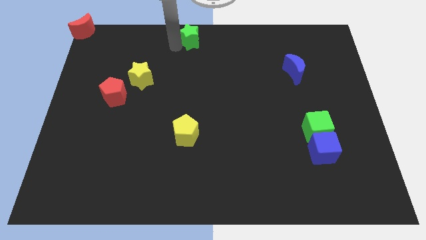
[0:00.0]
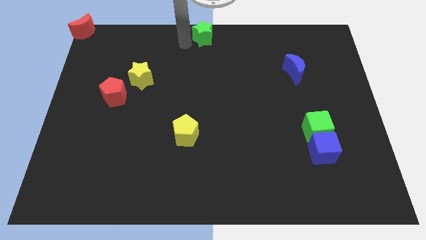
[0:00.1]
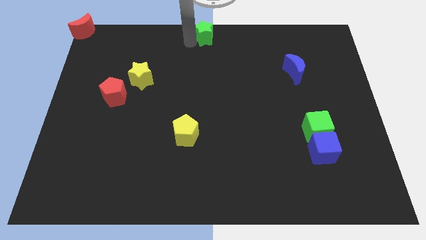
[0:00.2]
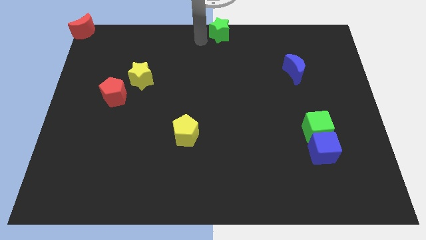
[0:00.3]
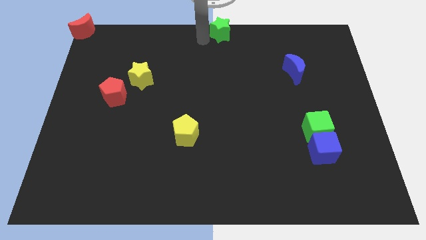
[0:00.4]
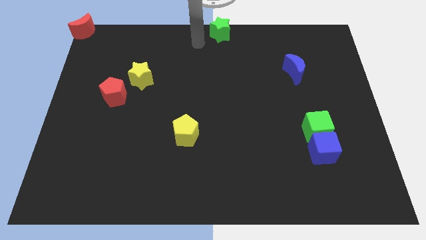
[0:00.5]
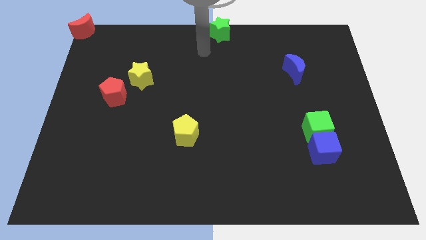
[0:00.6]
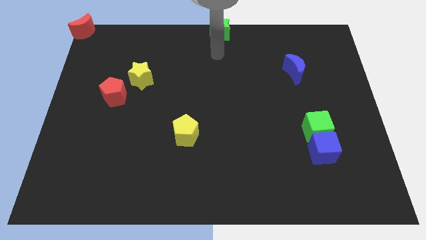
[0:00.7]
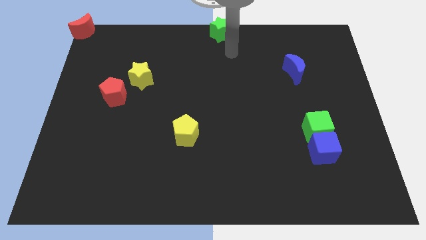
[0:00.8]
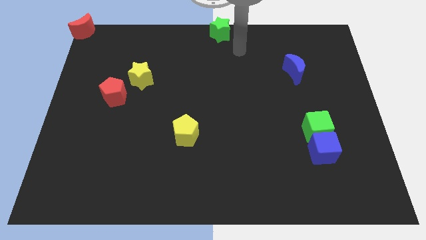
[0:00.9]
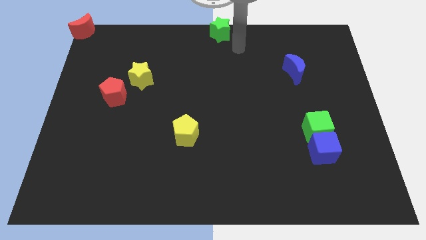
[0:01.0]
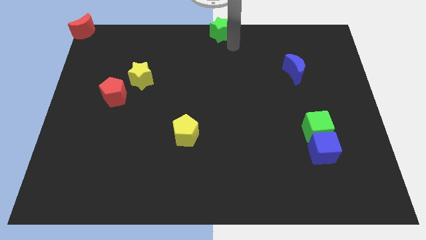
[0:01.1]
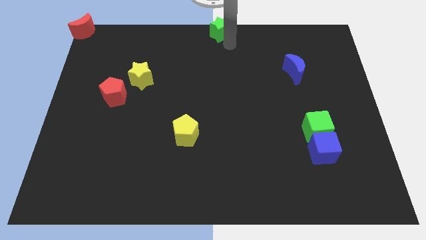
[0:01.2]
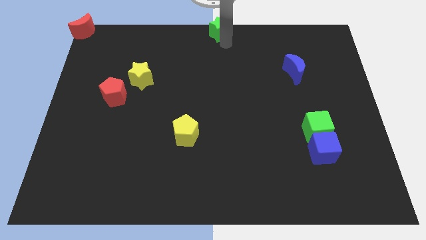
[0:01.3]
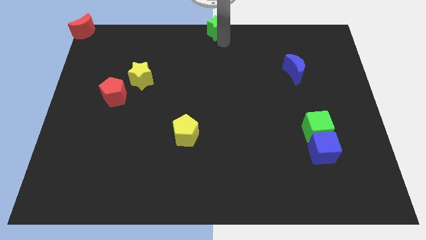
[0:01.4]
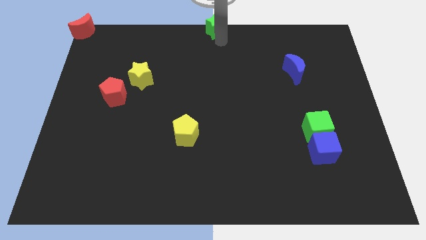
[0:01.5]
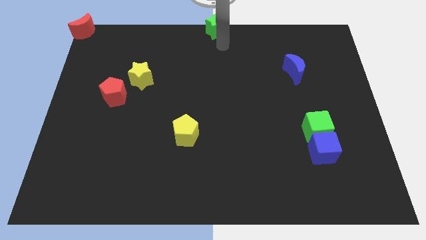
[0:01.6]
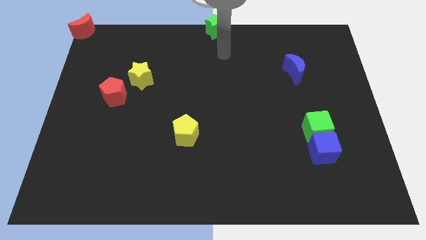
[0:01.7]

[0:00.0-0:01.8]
place the green star to the top center of the board

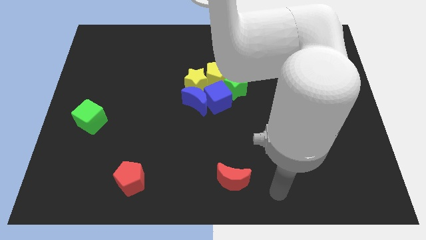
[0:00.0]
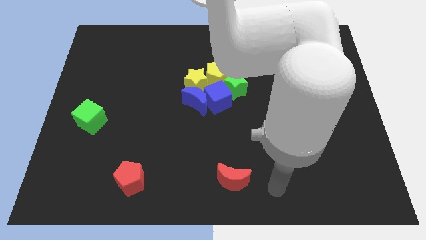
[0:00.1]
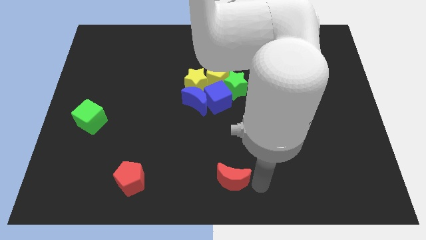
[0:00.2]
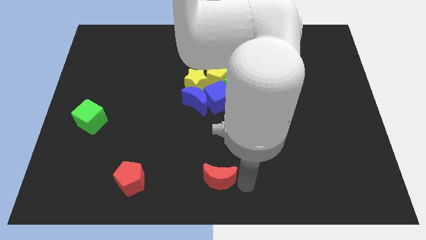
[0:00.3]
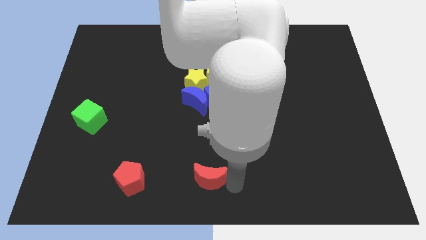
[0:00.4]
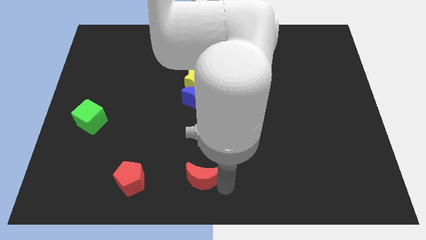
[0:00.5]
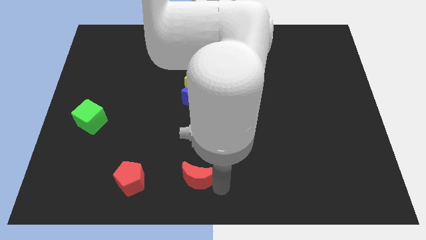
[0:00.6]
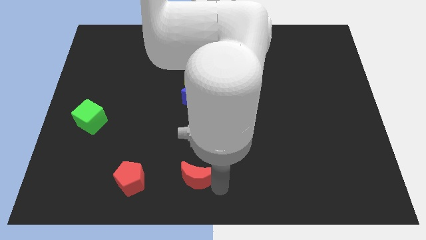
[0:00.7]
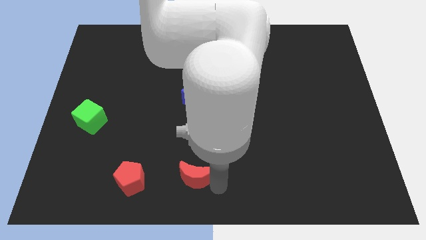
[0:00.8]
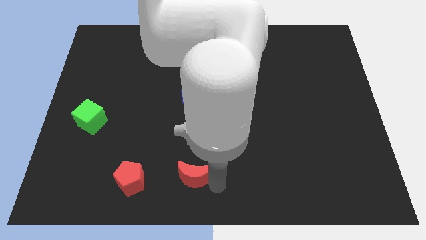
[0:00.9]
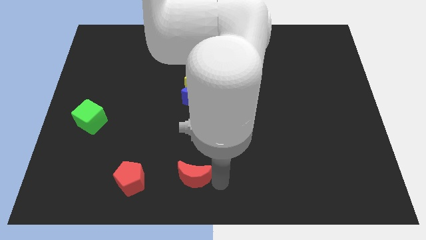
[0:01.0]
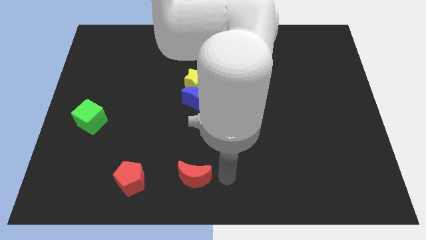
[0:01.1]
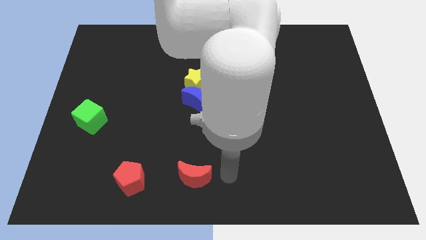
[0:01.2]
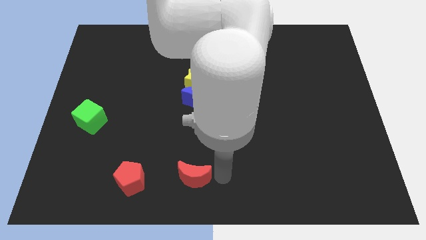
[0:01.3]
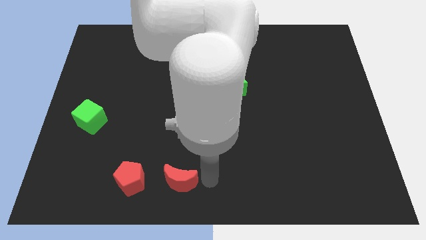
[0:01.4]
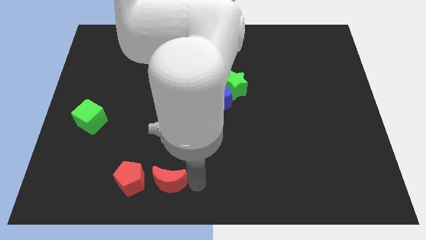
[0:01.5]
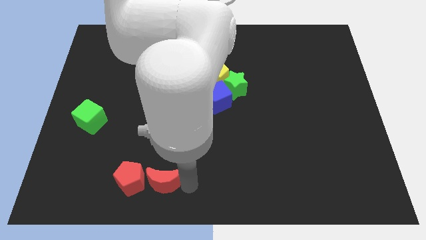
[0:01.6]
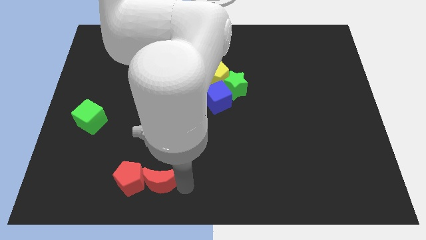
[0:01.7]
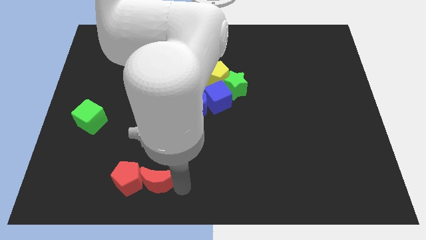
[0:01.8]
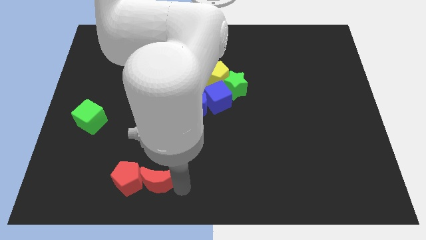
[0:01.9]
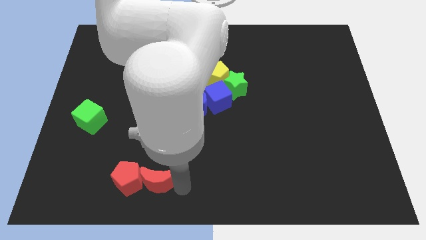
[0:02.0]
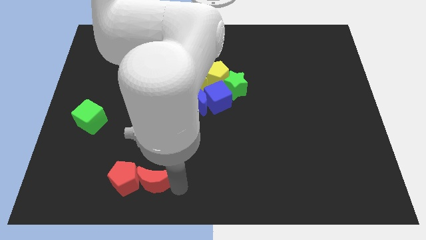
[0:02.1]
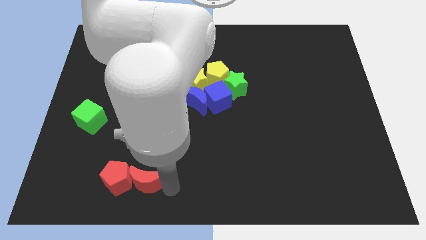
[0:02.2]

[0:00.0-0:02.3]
move the red moon right beside the red pentagon

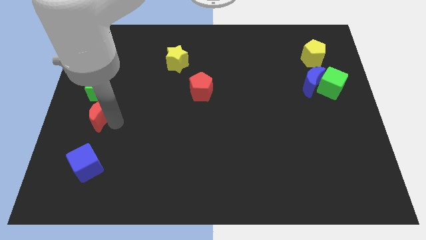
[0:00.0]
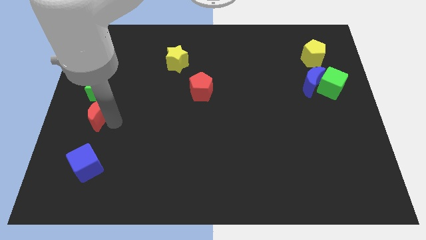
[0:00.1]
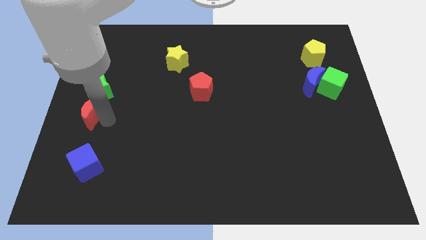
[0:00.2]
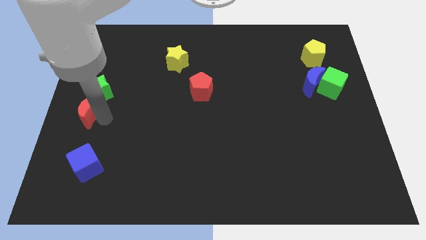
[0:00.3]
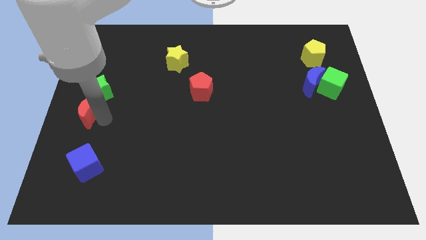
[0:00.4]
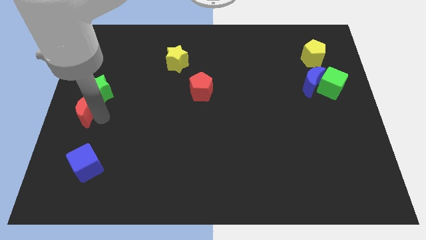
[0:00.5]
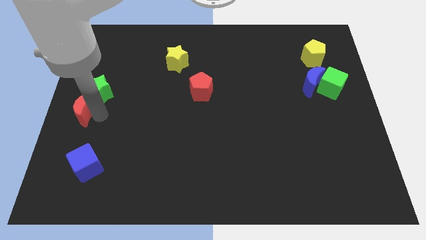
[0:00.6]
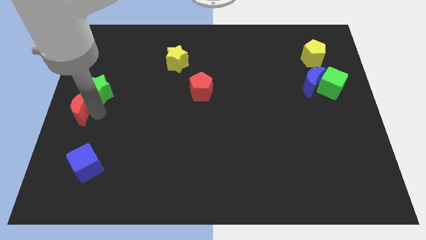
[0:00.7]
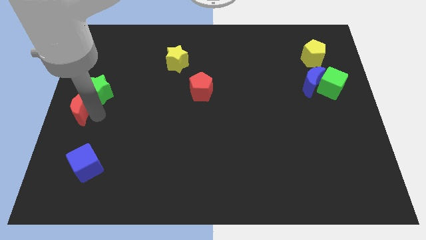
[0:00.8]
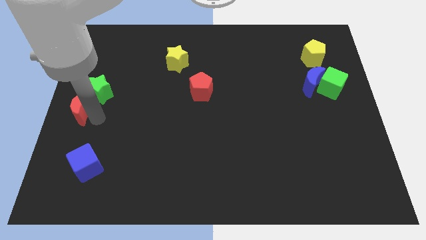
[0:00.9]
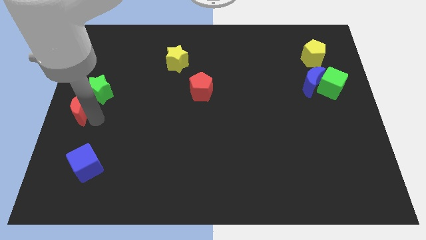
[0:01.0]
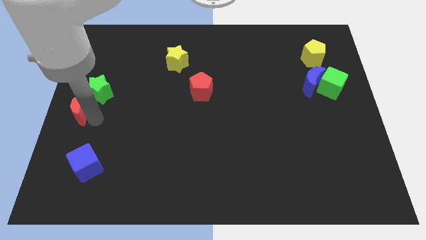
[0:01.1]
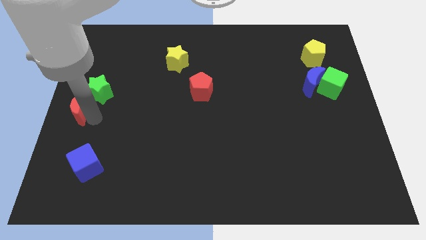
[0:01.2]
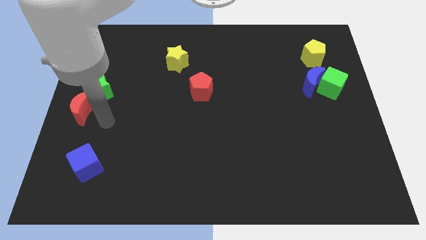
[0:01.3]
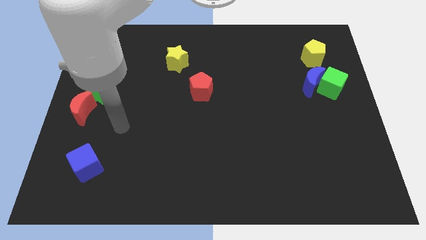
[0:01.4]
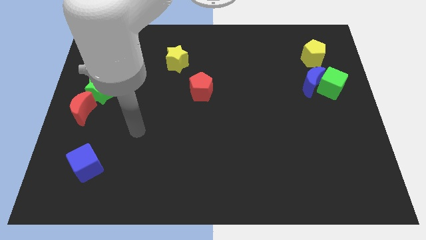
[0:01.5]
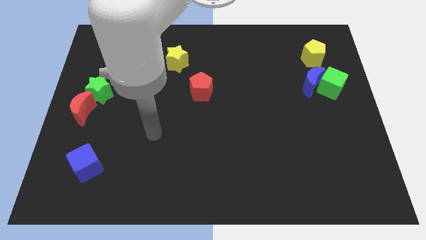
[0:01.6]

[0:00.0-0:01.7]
push the red crescent to the left of the board

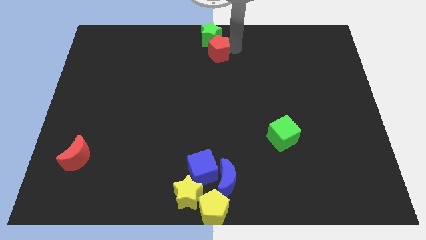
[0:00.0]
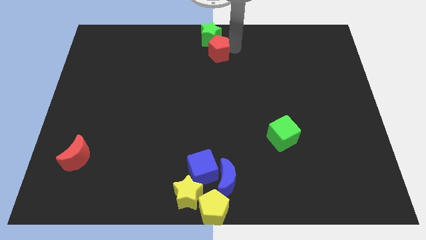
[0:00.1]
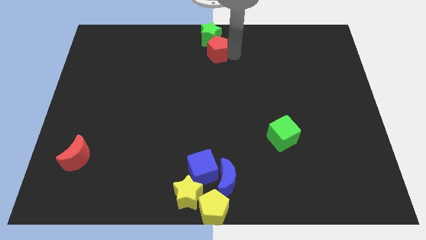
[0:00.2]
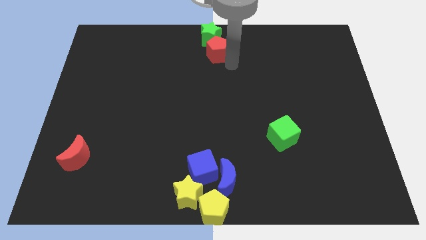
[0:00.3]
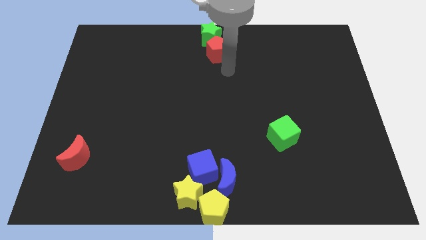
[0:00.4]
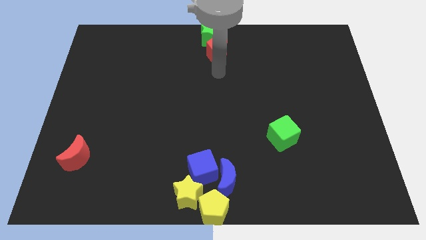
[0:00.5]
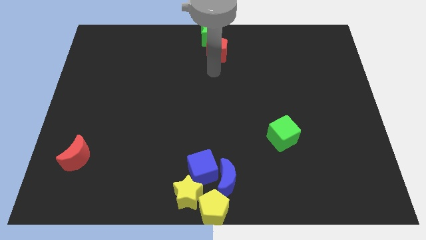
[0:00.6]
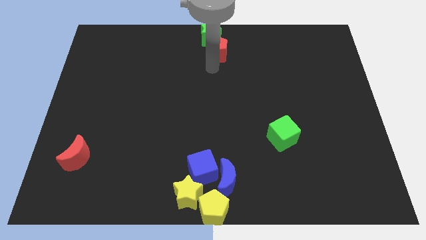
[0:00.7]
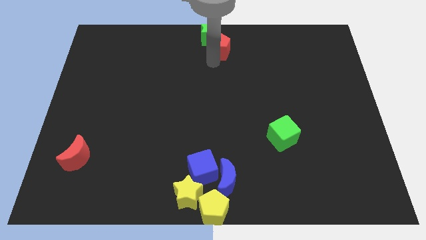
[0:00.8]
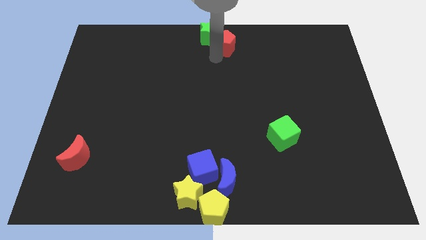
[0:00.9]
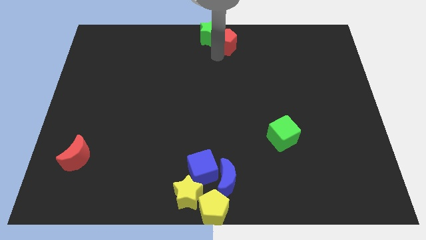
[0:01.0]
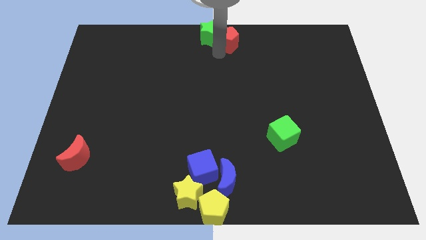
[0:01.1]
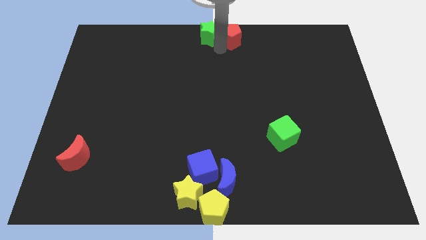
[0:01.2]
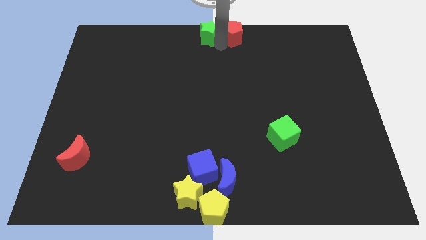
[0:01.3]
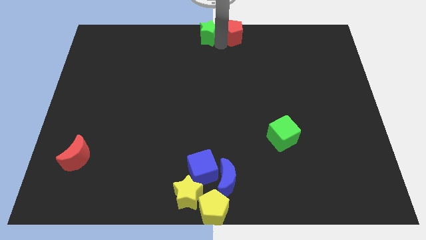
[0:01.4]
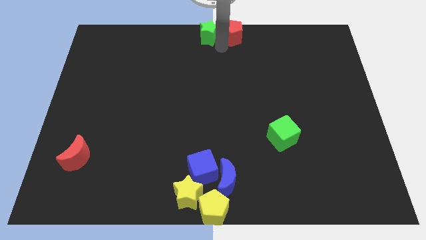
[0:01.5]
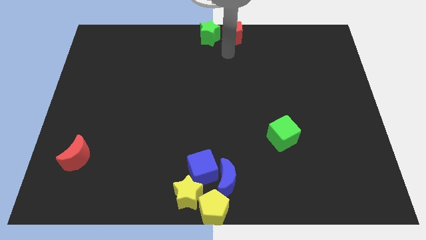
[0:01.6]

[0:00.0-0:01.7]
place red pentagon to the right side of the green star

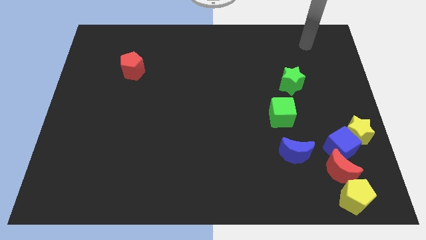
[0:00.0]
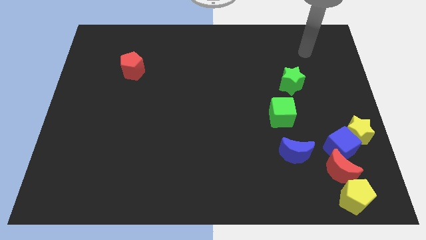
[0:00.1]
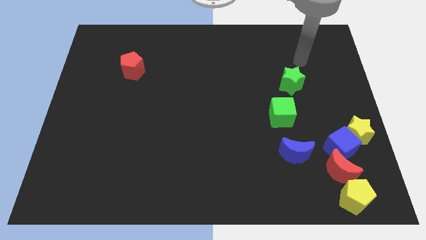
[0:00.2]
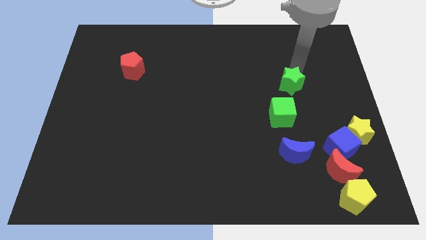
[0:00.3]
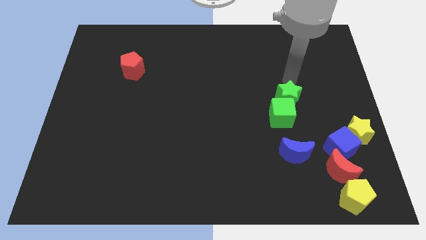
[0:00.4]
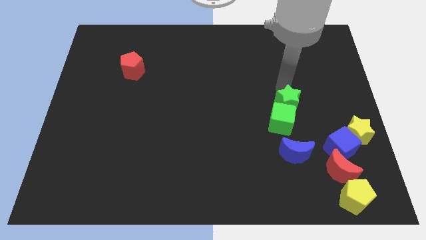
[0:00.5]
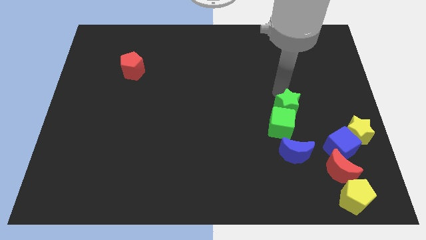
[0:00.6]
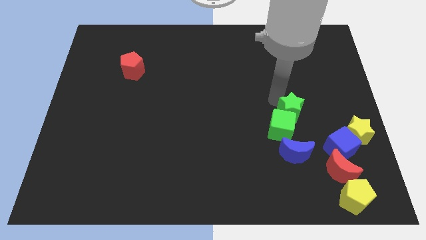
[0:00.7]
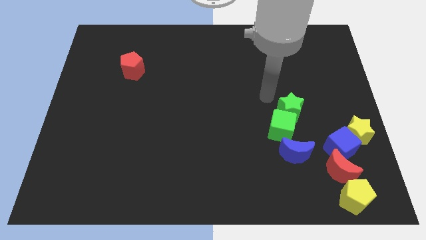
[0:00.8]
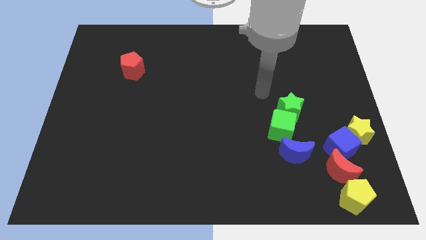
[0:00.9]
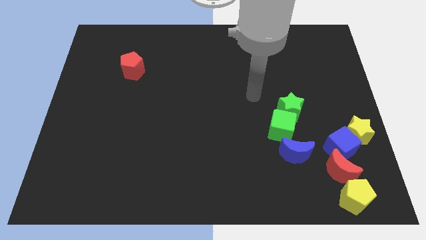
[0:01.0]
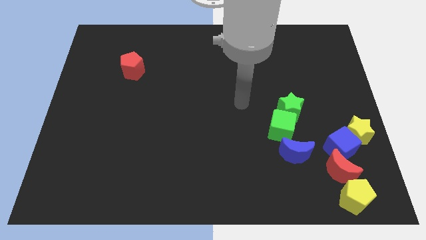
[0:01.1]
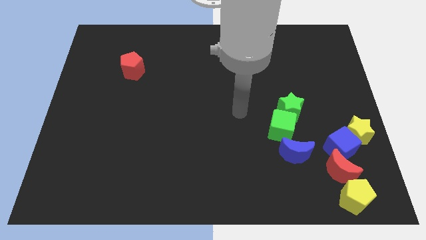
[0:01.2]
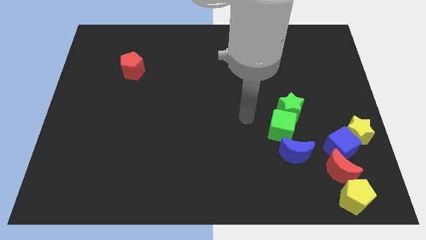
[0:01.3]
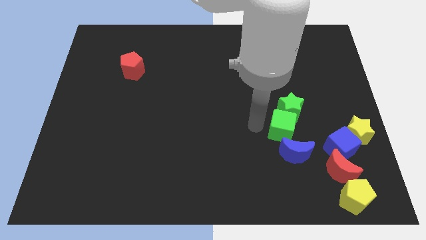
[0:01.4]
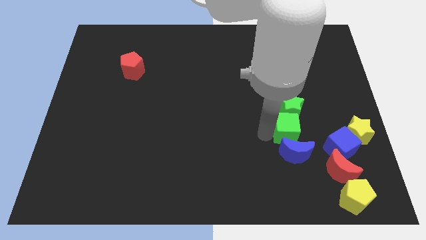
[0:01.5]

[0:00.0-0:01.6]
push the green star into the green cube
